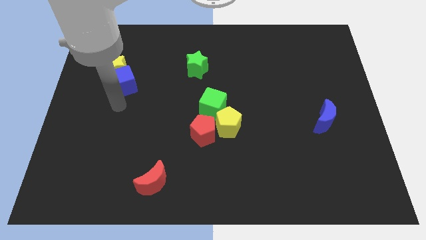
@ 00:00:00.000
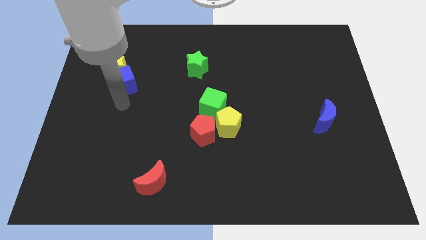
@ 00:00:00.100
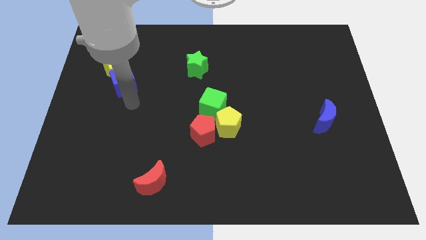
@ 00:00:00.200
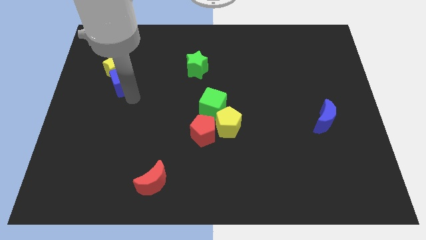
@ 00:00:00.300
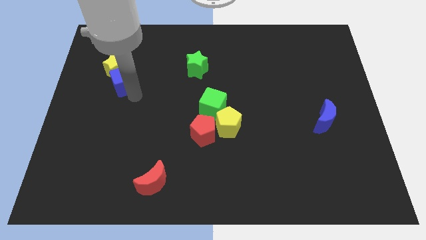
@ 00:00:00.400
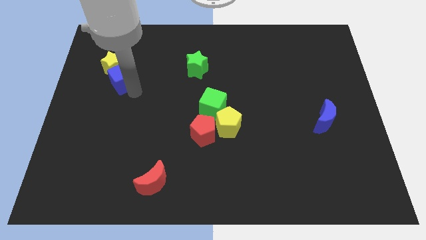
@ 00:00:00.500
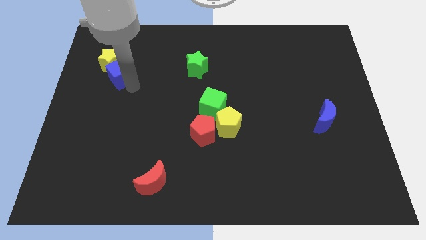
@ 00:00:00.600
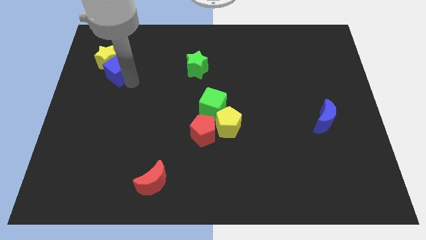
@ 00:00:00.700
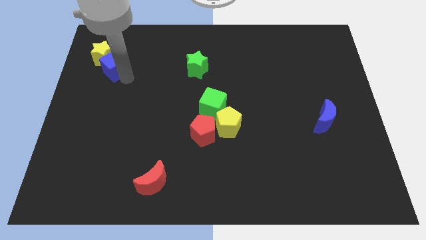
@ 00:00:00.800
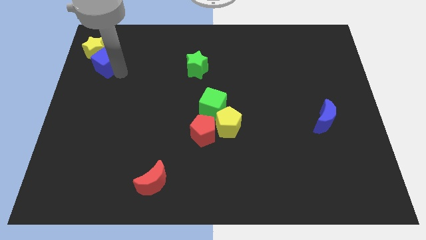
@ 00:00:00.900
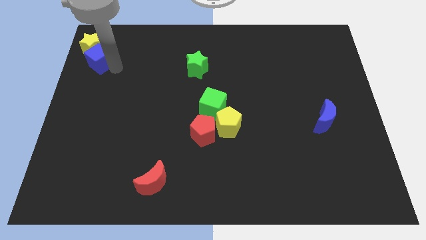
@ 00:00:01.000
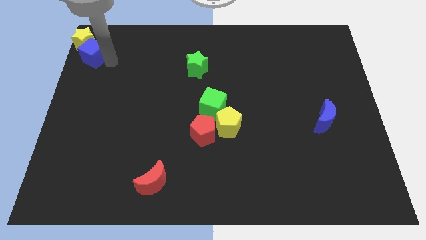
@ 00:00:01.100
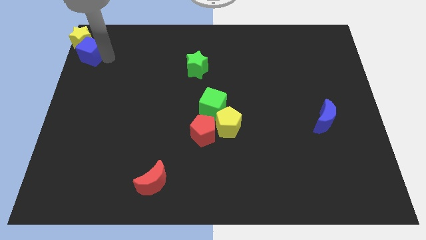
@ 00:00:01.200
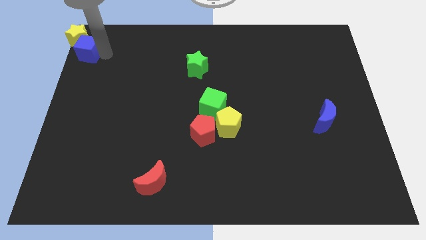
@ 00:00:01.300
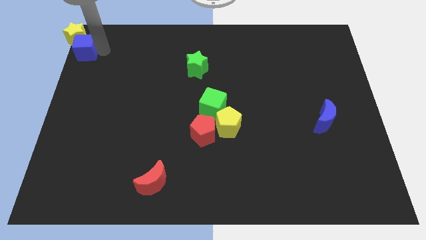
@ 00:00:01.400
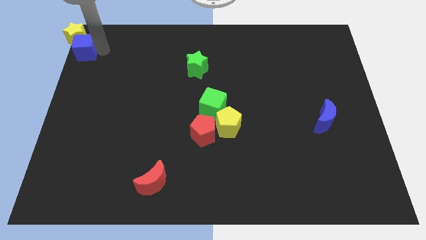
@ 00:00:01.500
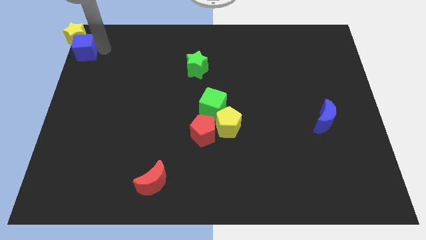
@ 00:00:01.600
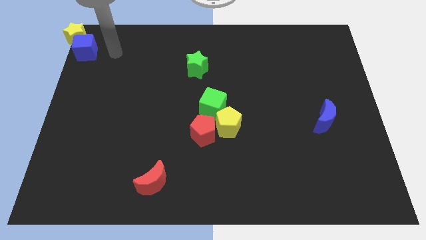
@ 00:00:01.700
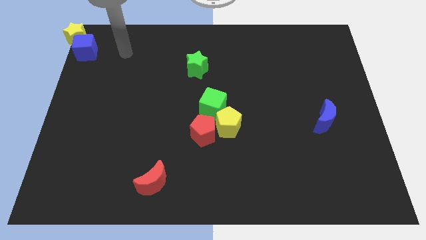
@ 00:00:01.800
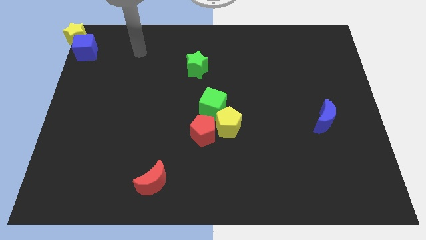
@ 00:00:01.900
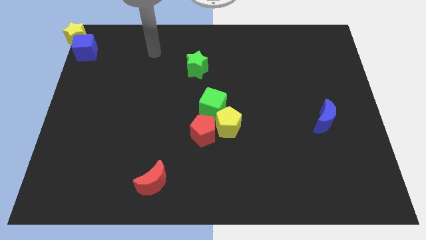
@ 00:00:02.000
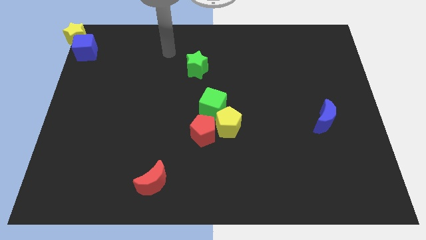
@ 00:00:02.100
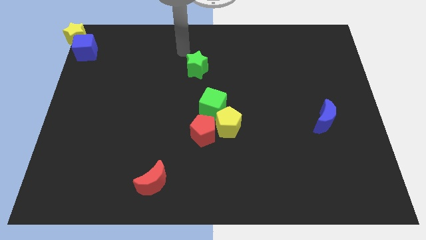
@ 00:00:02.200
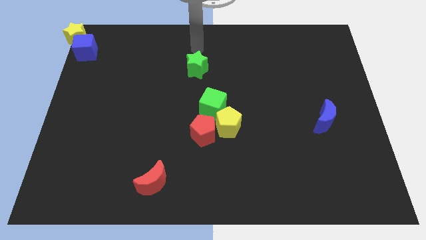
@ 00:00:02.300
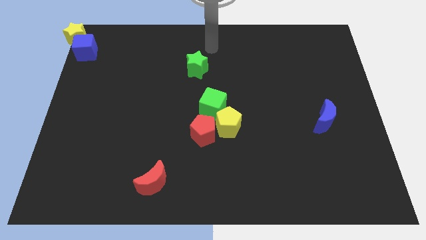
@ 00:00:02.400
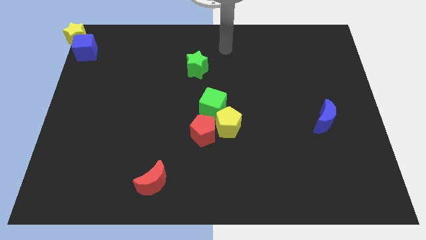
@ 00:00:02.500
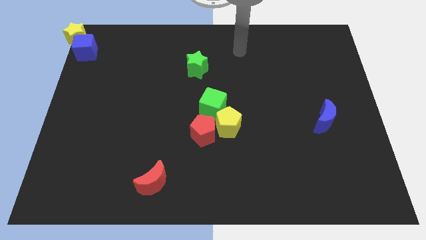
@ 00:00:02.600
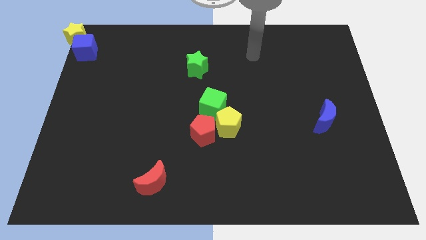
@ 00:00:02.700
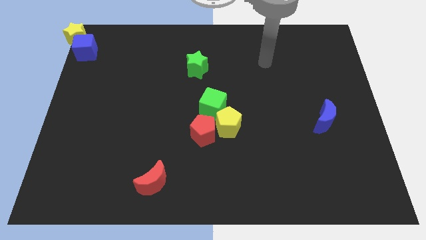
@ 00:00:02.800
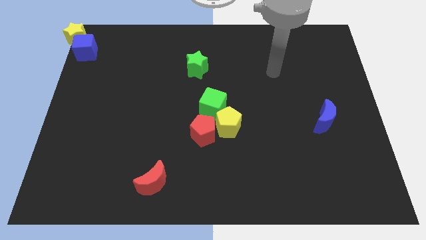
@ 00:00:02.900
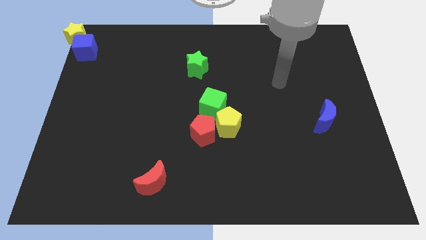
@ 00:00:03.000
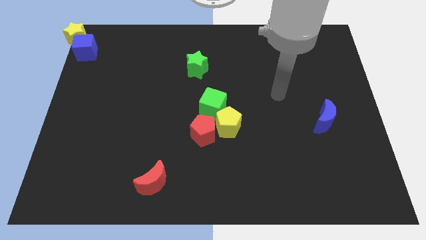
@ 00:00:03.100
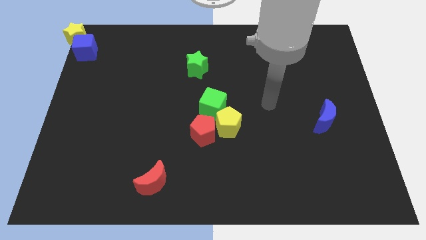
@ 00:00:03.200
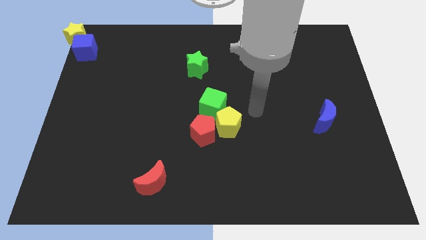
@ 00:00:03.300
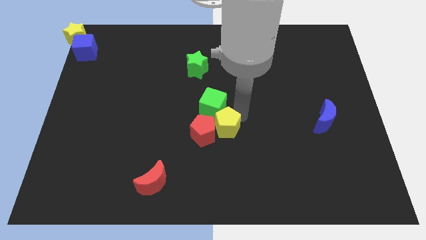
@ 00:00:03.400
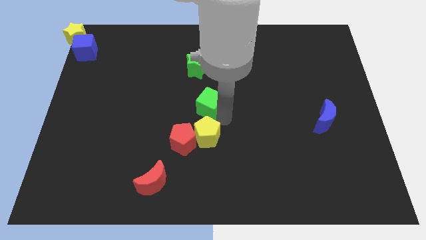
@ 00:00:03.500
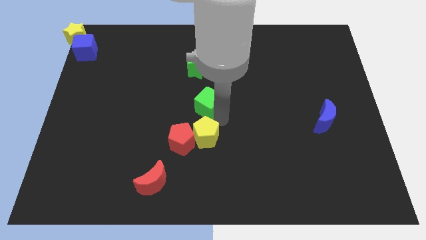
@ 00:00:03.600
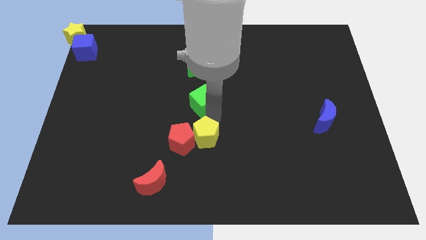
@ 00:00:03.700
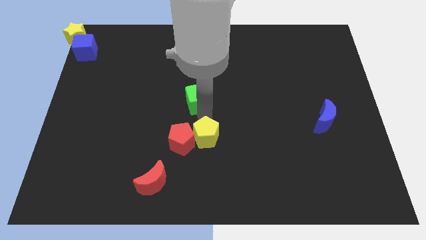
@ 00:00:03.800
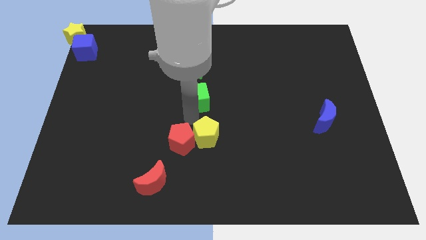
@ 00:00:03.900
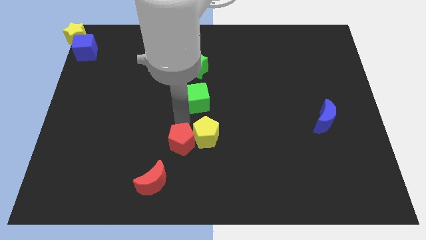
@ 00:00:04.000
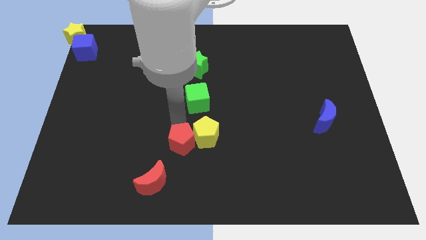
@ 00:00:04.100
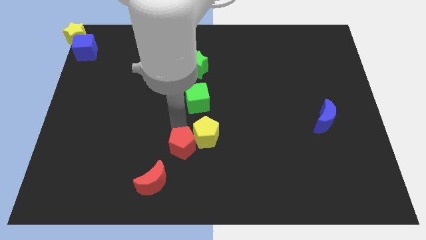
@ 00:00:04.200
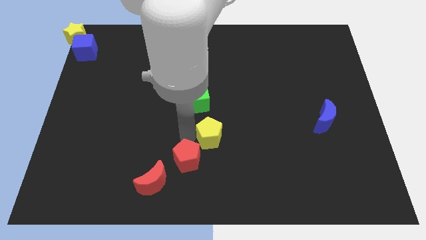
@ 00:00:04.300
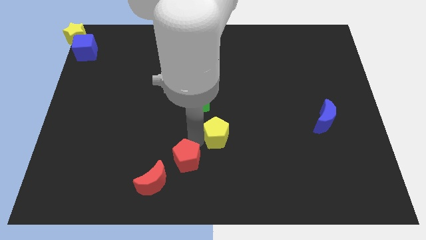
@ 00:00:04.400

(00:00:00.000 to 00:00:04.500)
push red pentagon towards red crescent

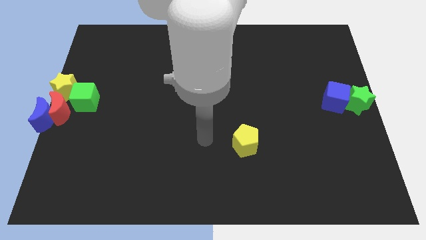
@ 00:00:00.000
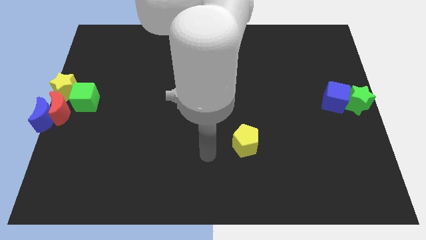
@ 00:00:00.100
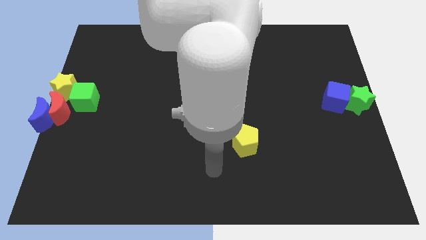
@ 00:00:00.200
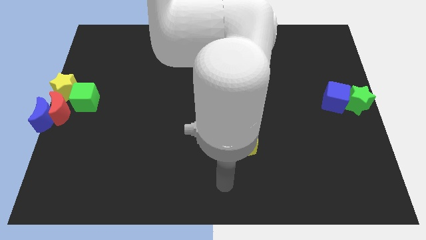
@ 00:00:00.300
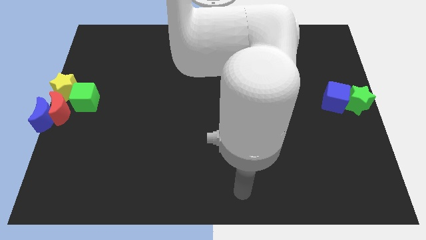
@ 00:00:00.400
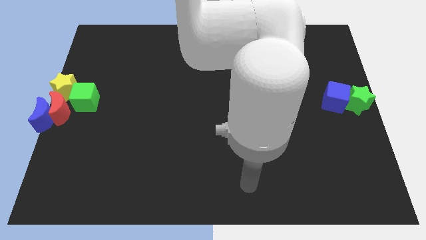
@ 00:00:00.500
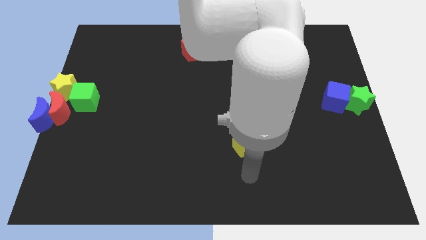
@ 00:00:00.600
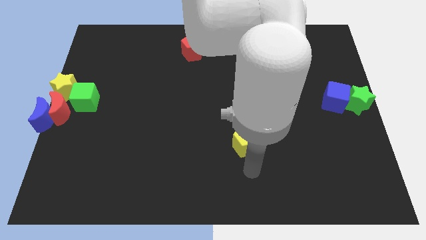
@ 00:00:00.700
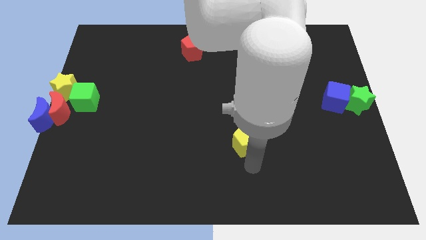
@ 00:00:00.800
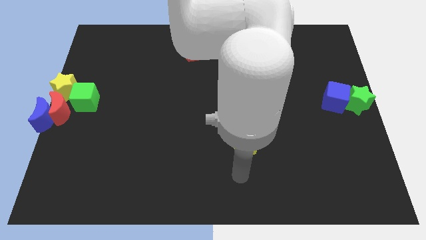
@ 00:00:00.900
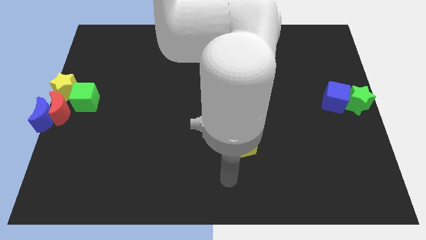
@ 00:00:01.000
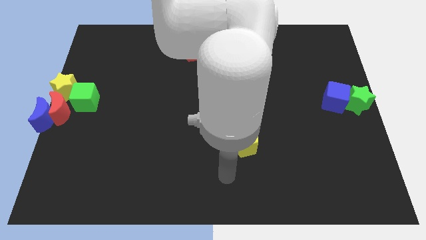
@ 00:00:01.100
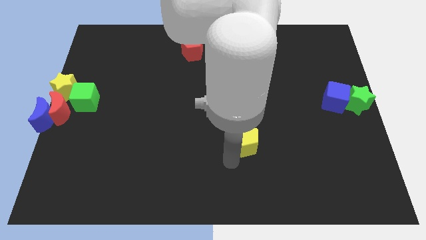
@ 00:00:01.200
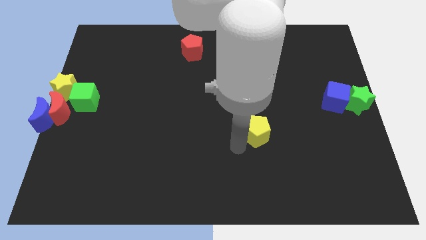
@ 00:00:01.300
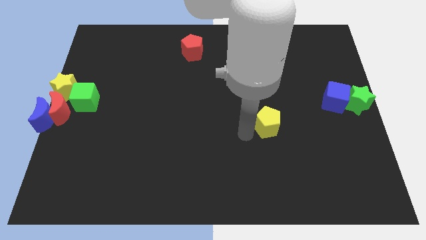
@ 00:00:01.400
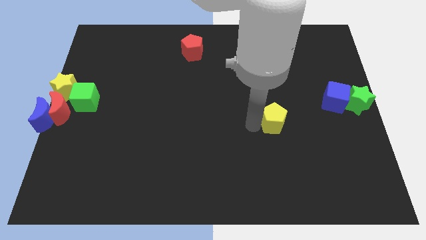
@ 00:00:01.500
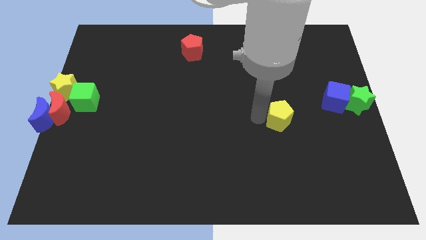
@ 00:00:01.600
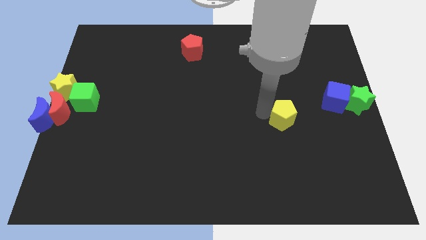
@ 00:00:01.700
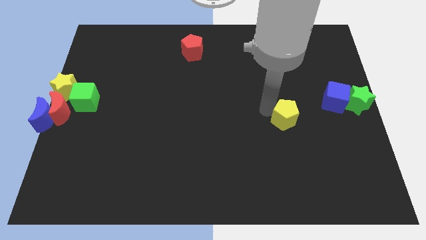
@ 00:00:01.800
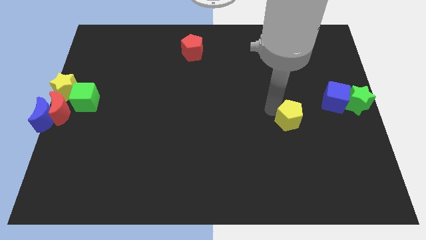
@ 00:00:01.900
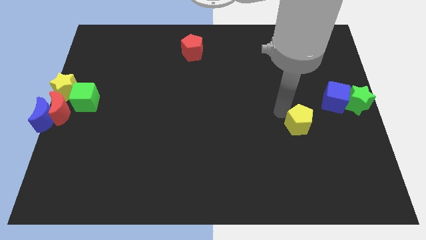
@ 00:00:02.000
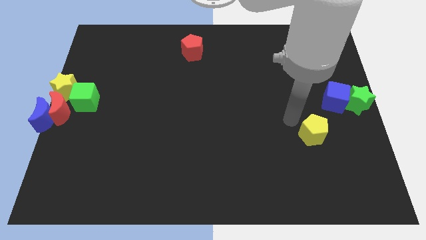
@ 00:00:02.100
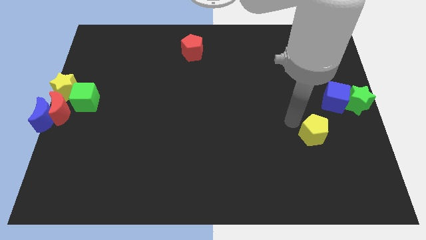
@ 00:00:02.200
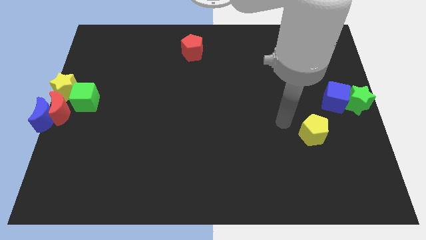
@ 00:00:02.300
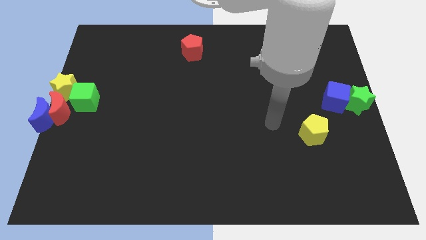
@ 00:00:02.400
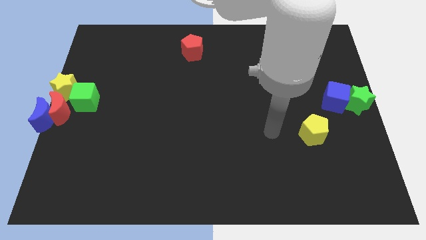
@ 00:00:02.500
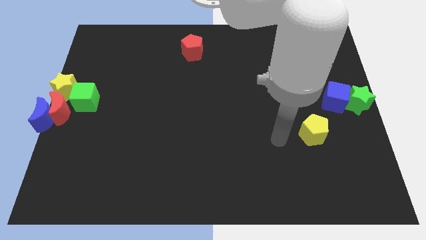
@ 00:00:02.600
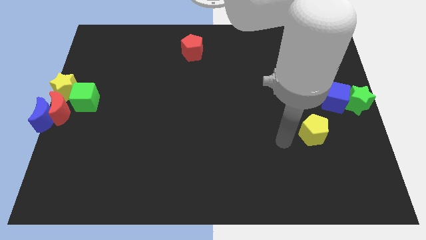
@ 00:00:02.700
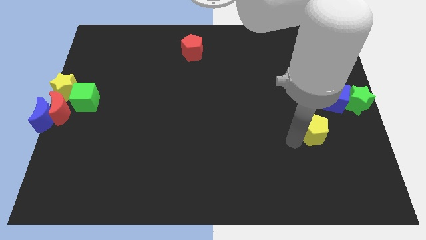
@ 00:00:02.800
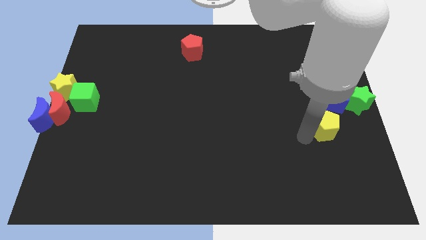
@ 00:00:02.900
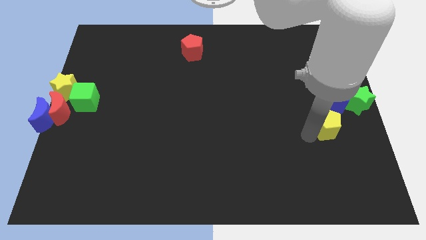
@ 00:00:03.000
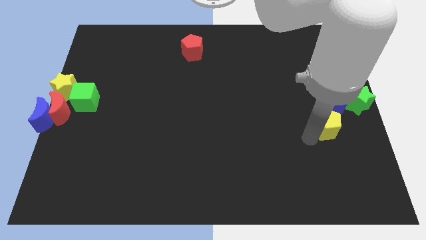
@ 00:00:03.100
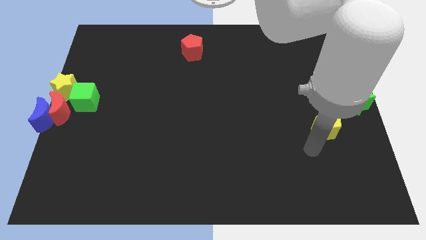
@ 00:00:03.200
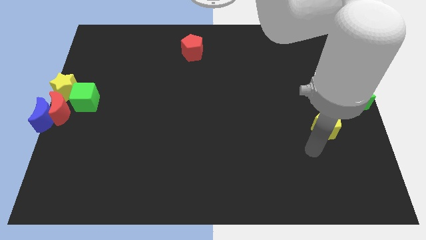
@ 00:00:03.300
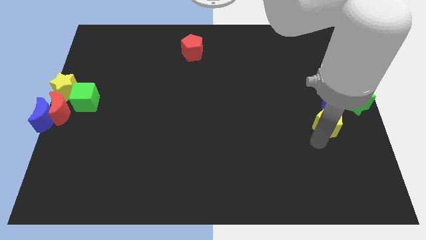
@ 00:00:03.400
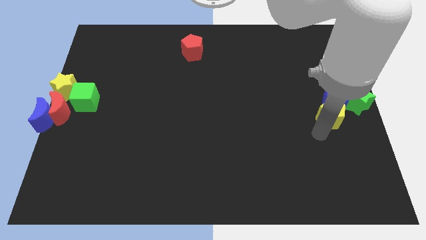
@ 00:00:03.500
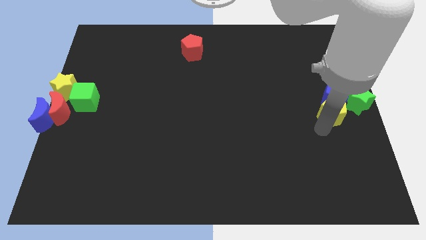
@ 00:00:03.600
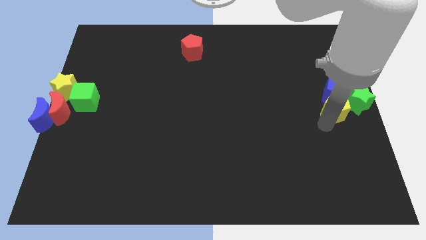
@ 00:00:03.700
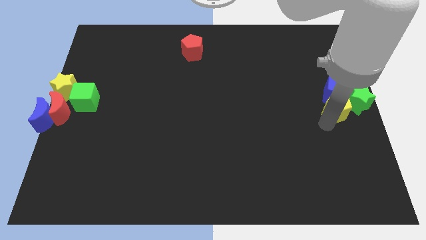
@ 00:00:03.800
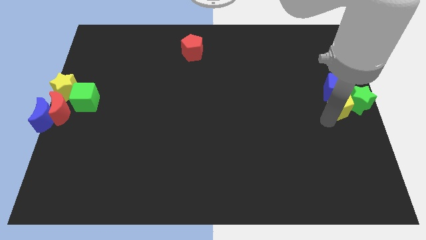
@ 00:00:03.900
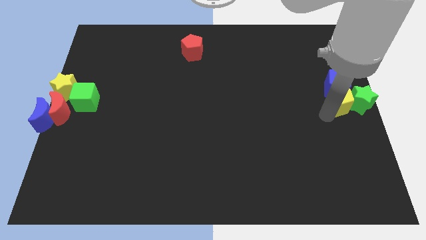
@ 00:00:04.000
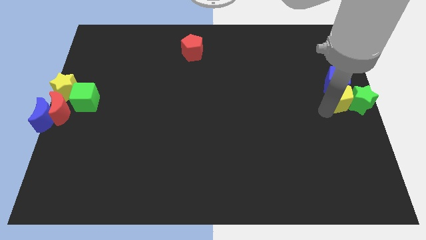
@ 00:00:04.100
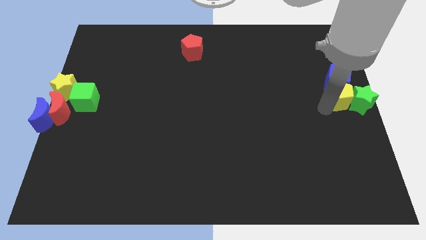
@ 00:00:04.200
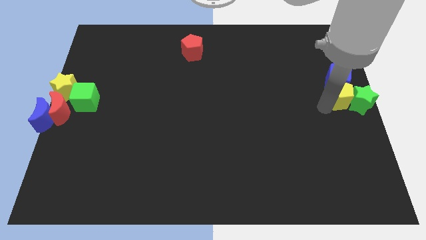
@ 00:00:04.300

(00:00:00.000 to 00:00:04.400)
move the yellow pentagon into the blue cube
